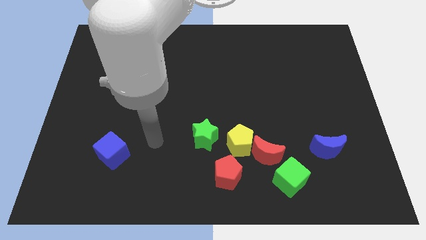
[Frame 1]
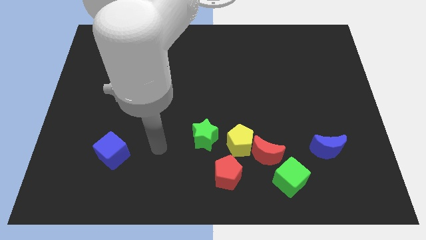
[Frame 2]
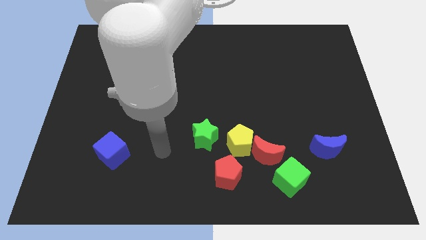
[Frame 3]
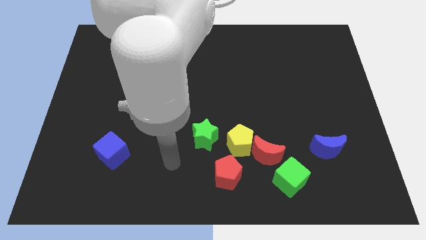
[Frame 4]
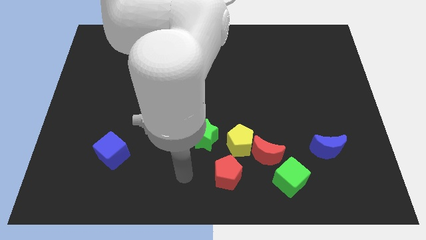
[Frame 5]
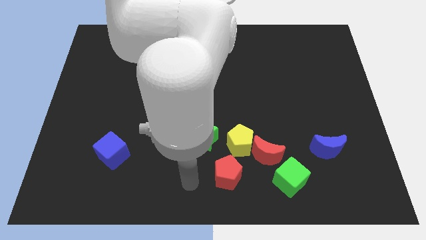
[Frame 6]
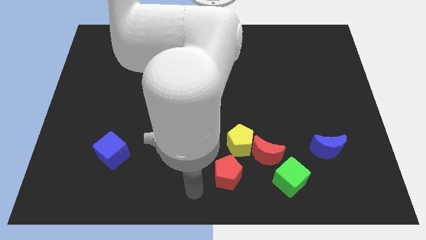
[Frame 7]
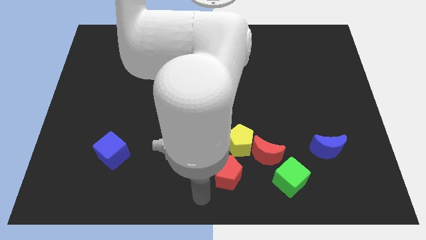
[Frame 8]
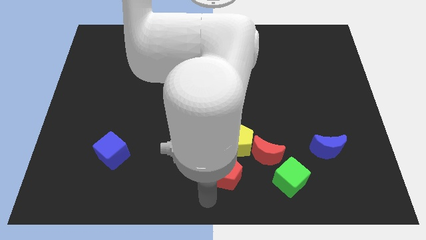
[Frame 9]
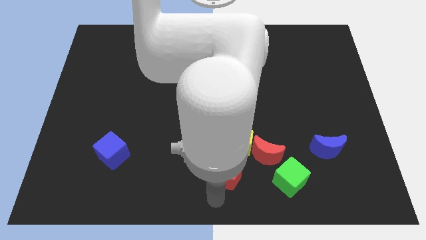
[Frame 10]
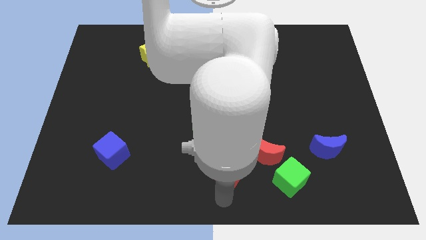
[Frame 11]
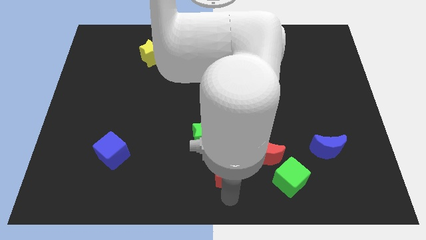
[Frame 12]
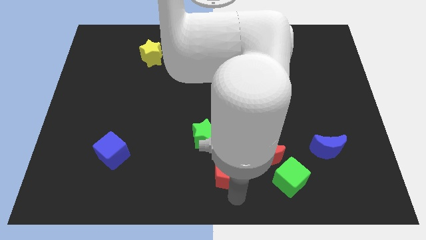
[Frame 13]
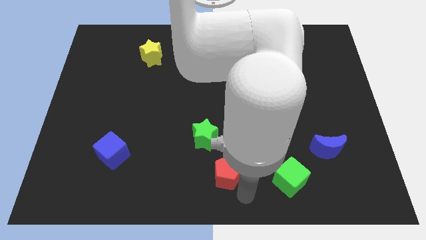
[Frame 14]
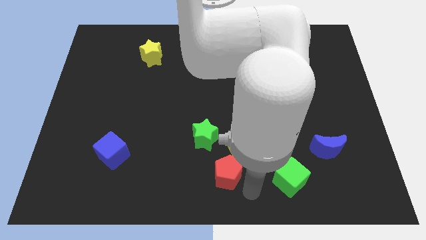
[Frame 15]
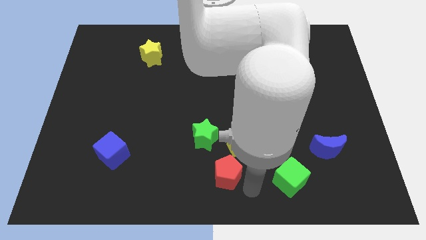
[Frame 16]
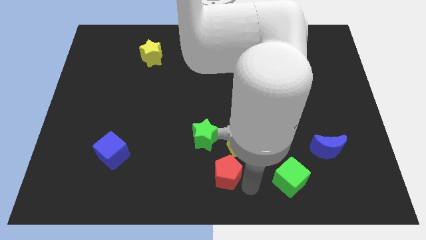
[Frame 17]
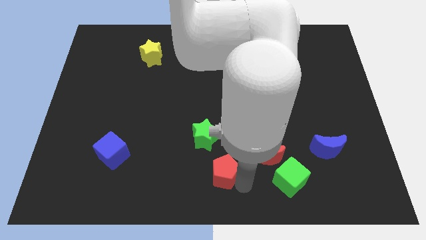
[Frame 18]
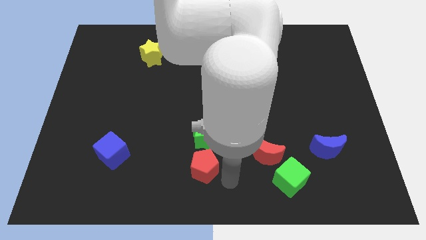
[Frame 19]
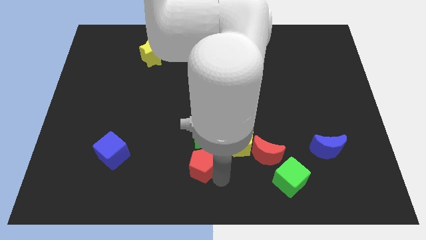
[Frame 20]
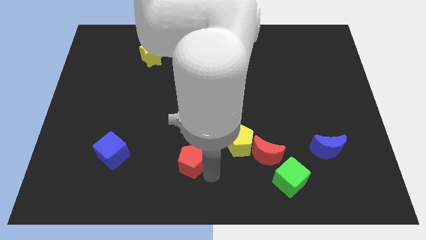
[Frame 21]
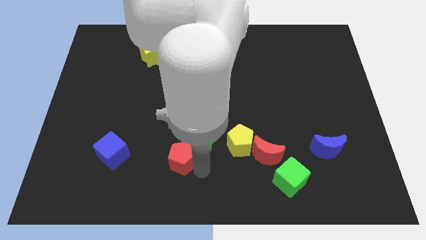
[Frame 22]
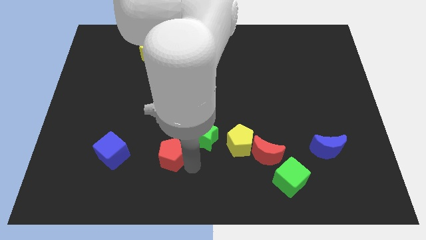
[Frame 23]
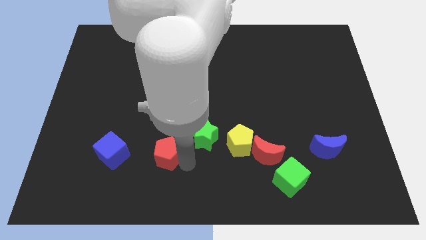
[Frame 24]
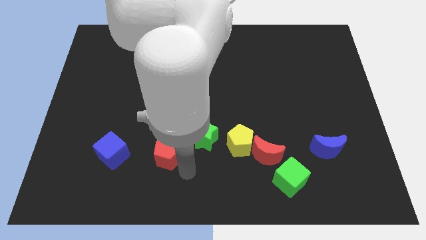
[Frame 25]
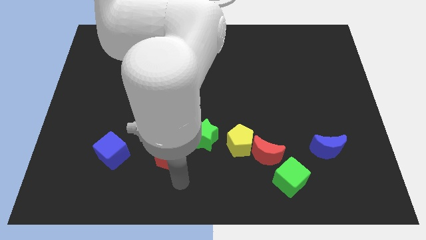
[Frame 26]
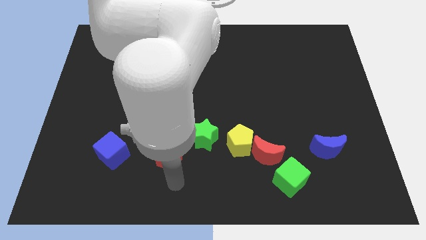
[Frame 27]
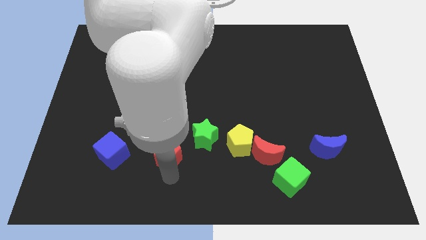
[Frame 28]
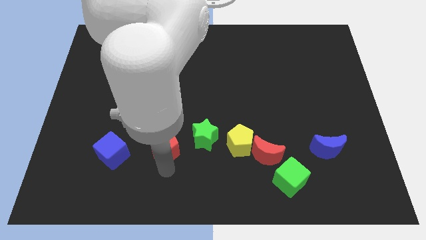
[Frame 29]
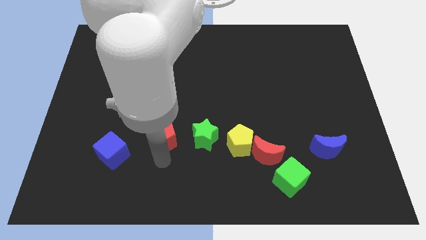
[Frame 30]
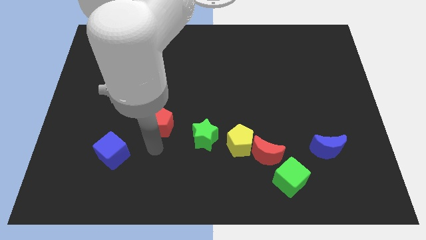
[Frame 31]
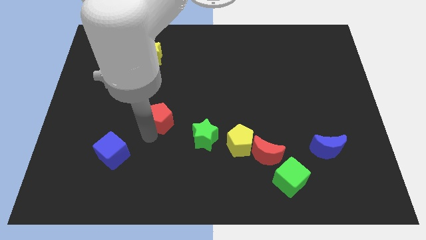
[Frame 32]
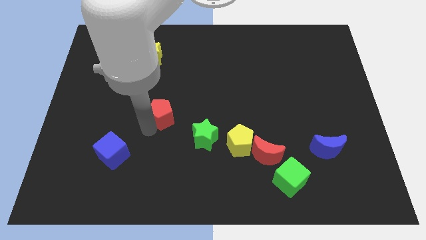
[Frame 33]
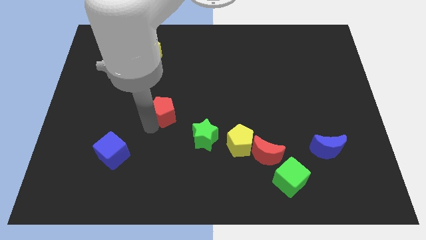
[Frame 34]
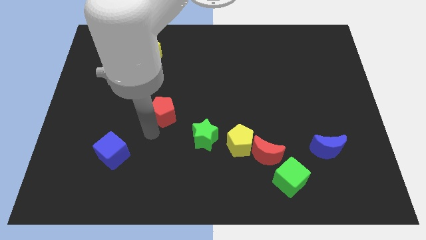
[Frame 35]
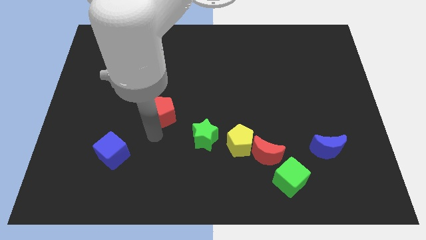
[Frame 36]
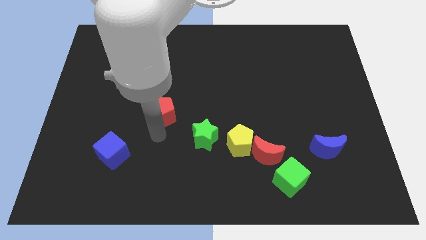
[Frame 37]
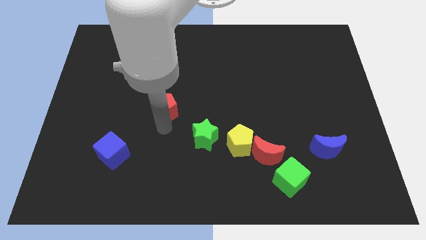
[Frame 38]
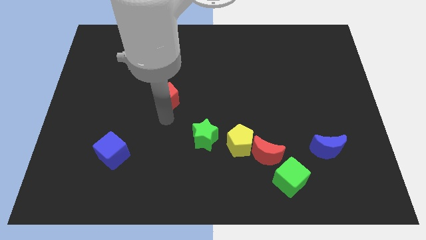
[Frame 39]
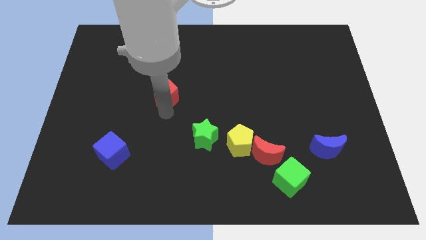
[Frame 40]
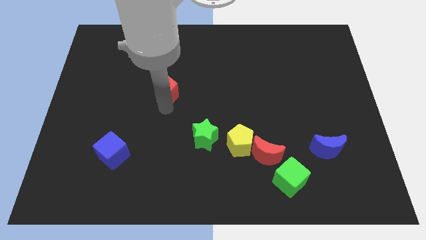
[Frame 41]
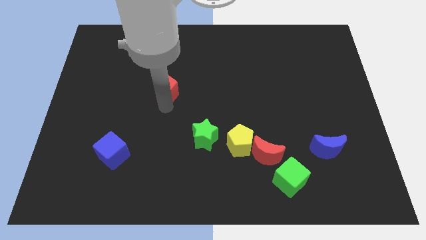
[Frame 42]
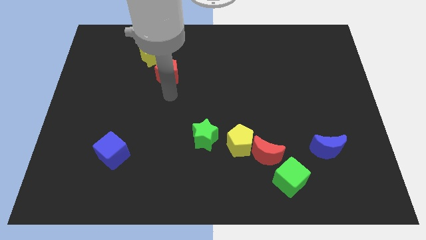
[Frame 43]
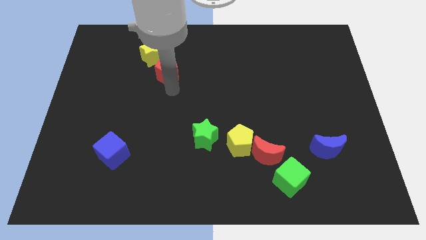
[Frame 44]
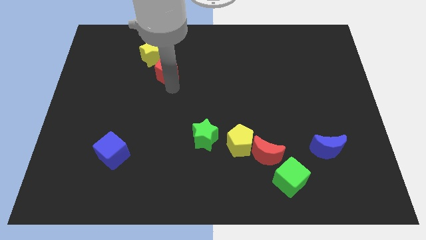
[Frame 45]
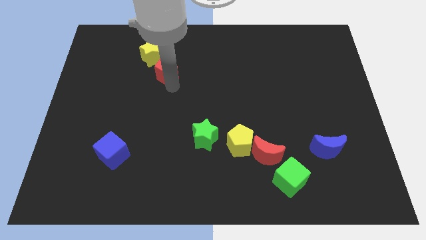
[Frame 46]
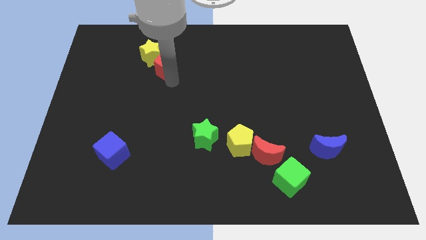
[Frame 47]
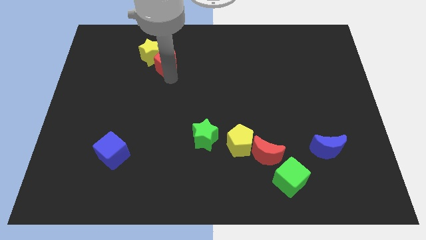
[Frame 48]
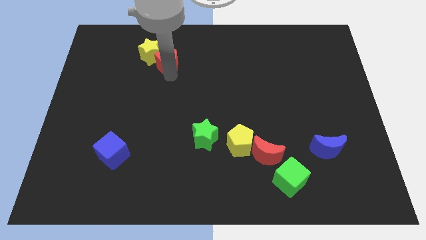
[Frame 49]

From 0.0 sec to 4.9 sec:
put the red pentagon towards the yellow star

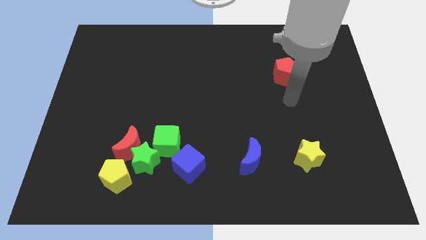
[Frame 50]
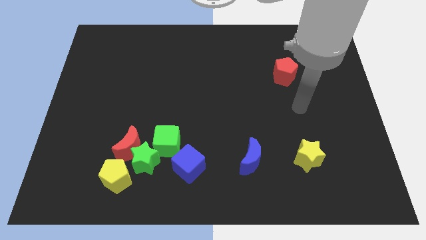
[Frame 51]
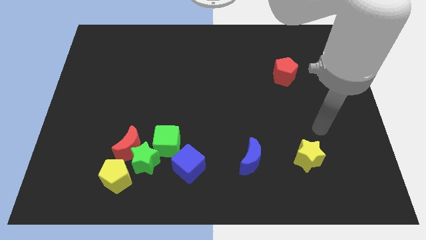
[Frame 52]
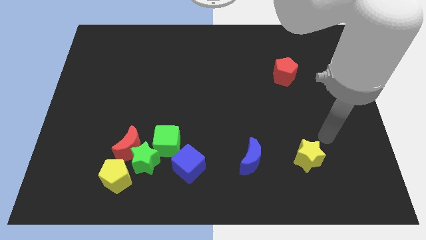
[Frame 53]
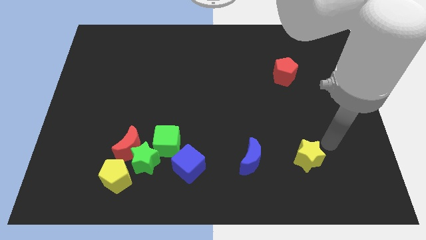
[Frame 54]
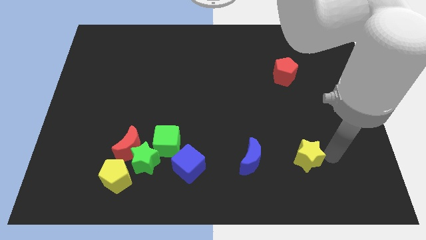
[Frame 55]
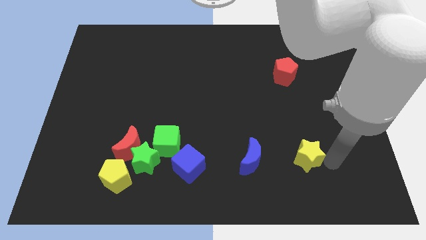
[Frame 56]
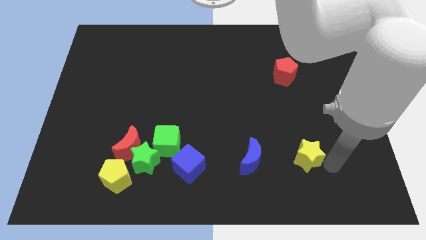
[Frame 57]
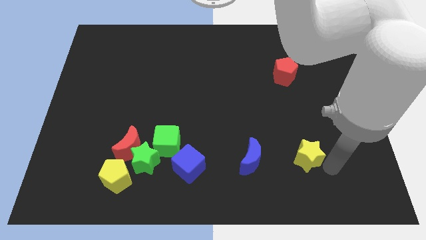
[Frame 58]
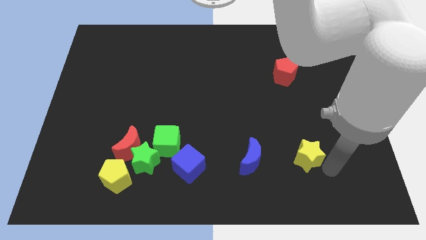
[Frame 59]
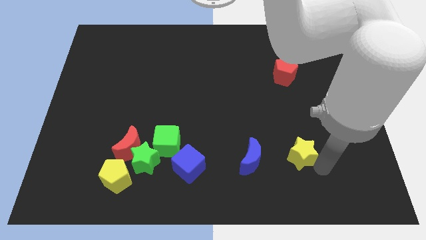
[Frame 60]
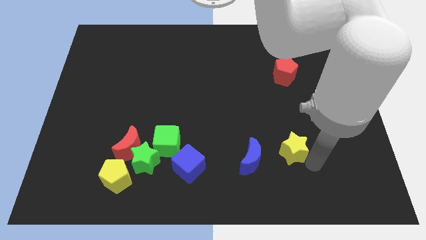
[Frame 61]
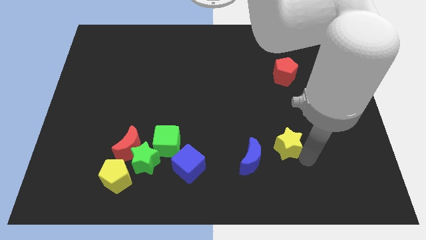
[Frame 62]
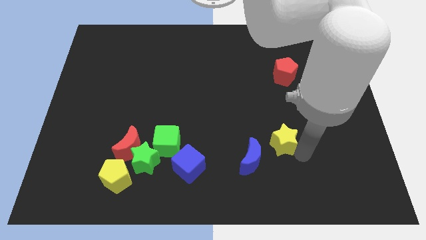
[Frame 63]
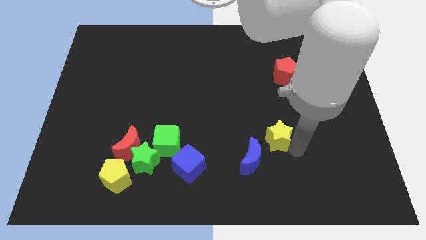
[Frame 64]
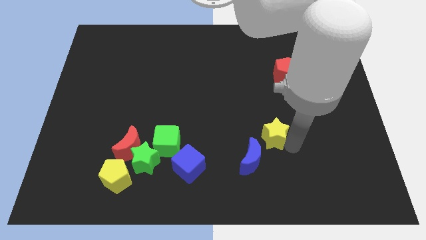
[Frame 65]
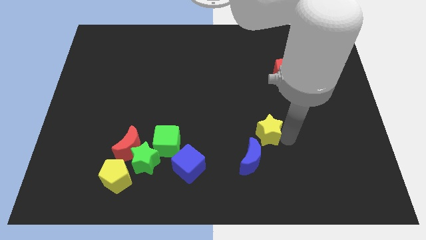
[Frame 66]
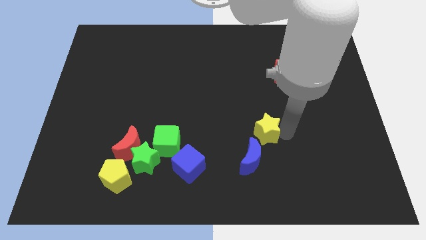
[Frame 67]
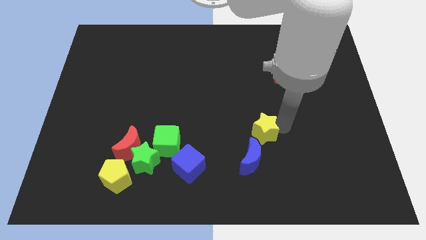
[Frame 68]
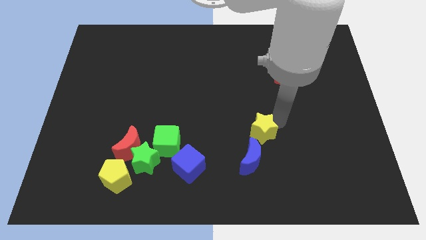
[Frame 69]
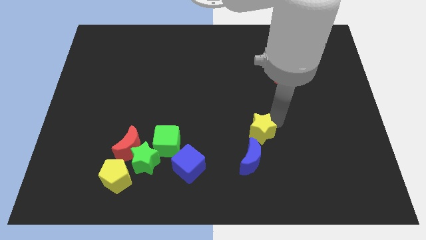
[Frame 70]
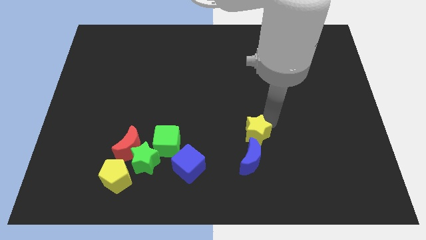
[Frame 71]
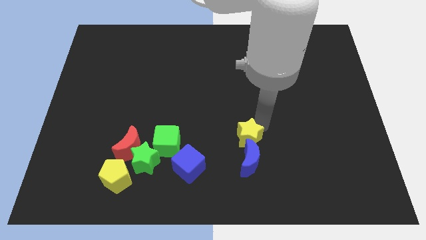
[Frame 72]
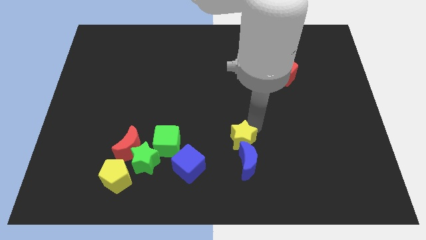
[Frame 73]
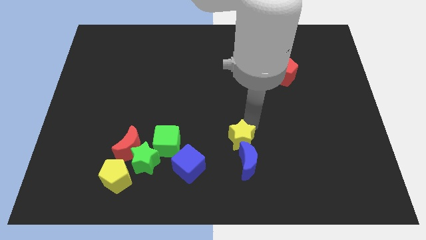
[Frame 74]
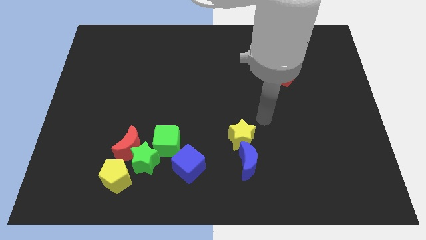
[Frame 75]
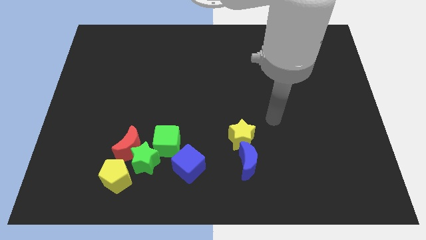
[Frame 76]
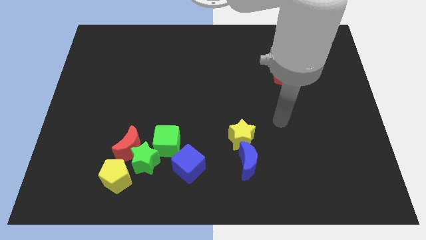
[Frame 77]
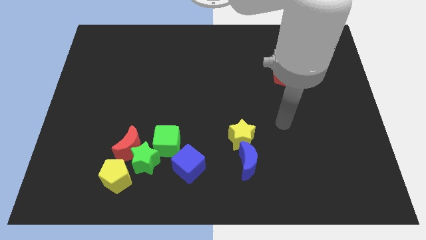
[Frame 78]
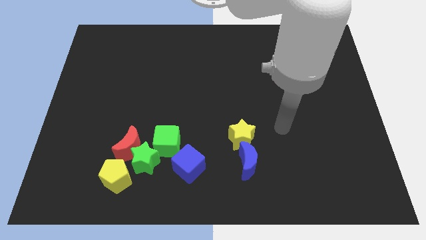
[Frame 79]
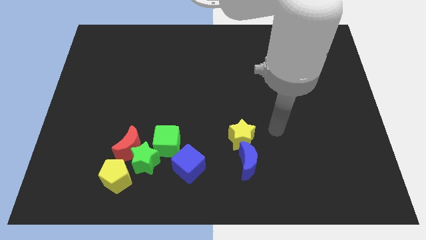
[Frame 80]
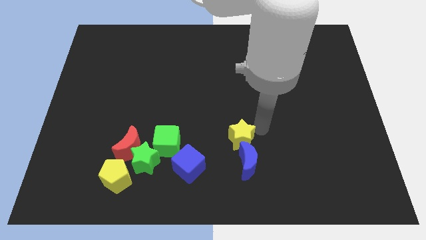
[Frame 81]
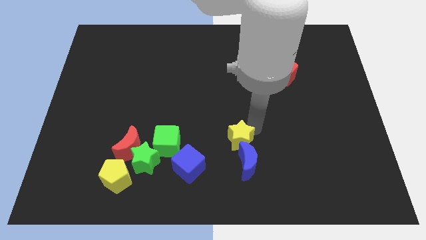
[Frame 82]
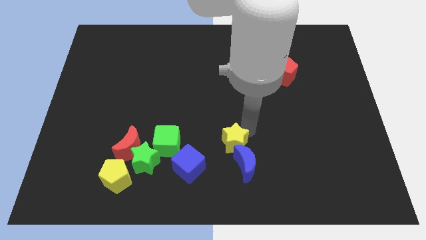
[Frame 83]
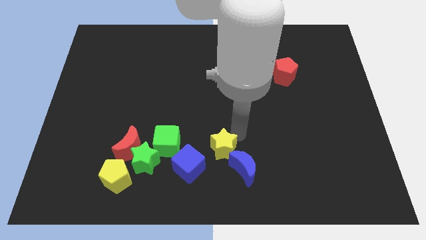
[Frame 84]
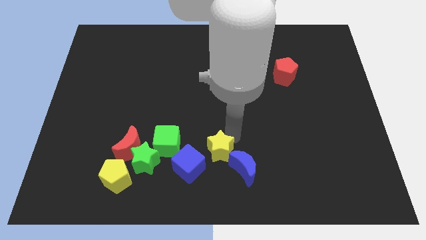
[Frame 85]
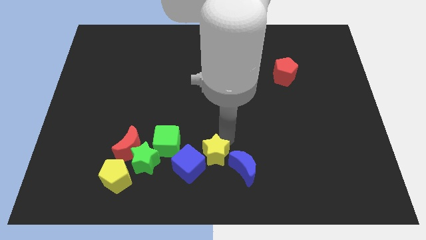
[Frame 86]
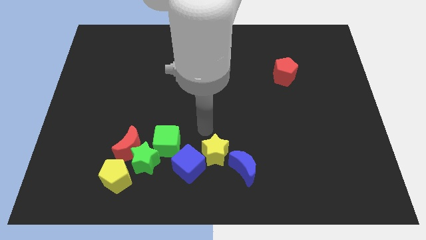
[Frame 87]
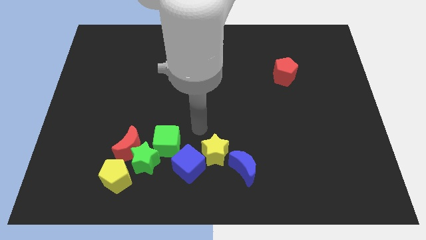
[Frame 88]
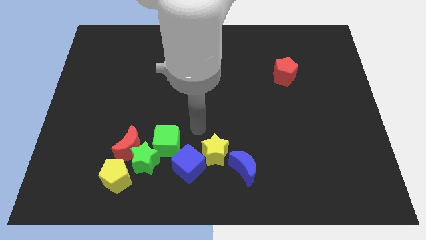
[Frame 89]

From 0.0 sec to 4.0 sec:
put the yellow star next to the blue cube
